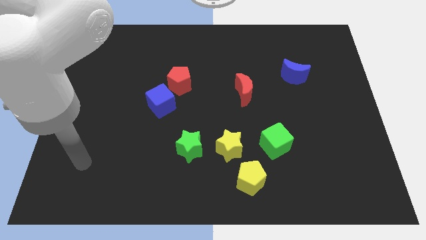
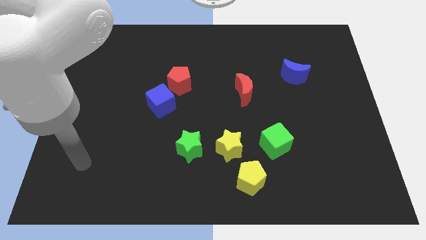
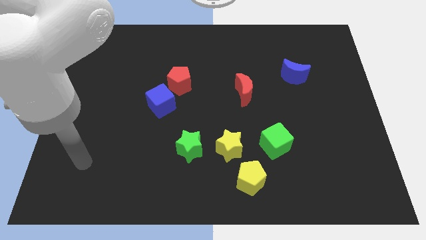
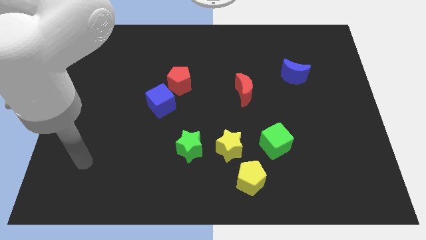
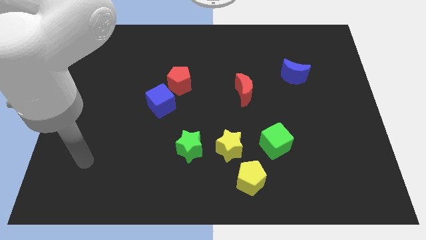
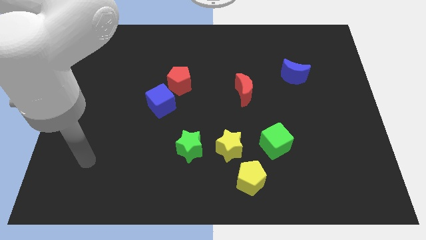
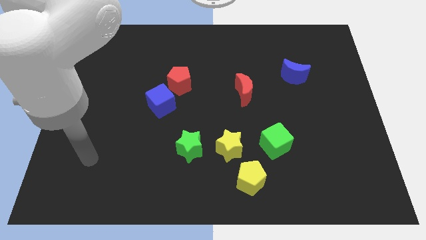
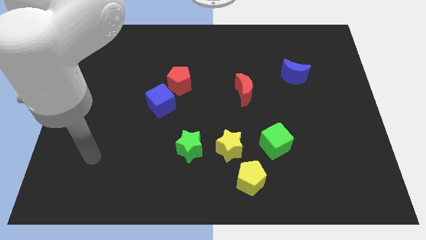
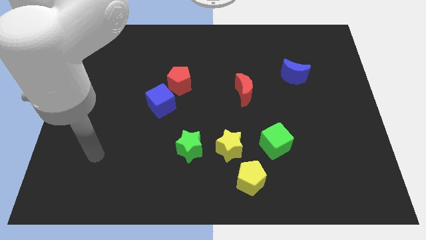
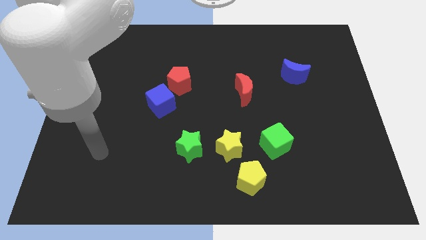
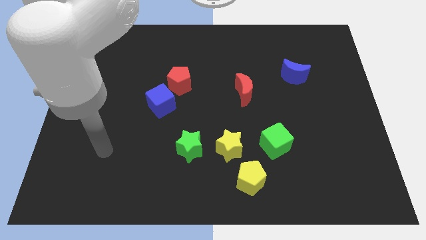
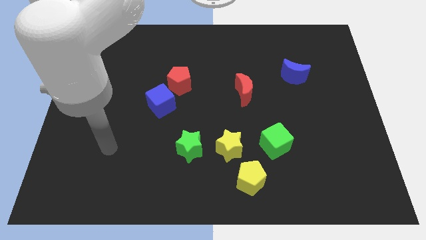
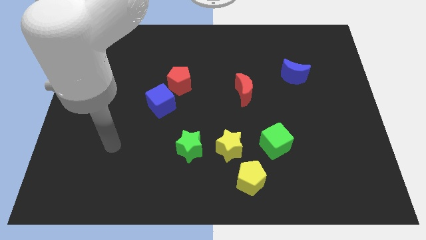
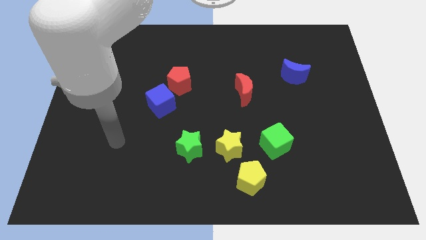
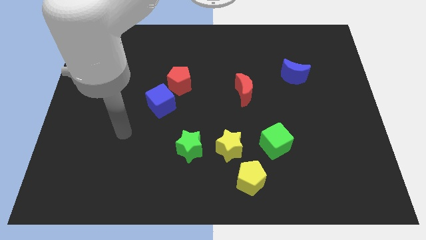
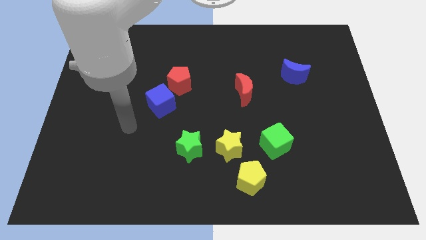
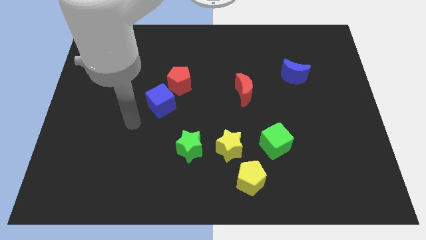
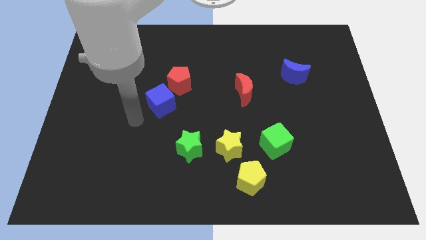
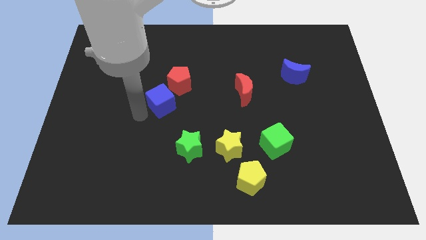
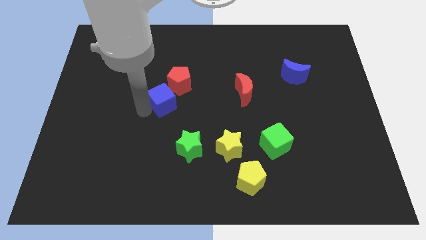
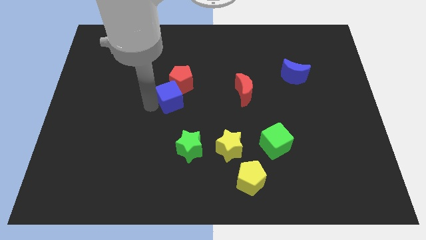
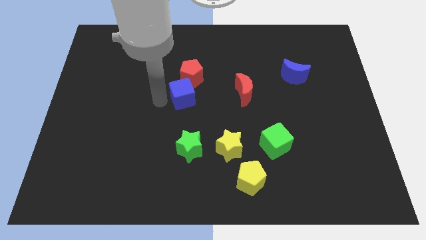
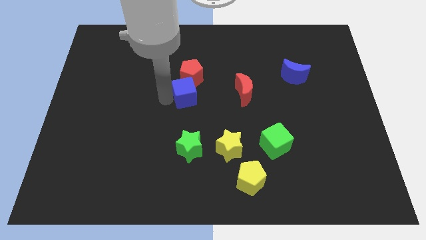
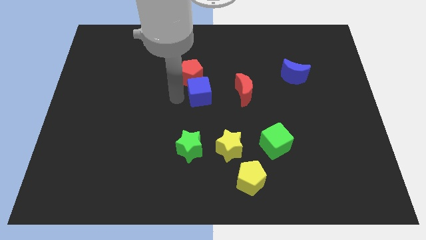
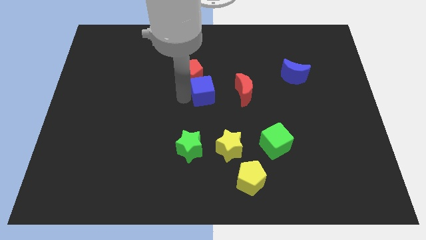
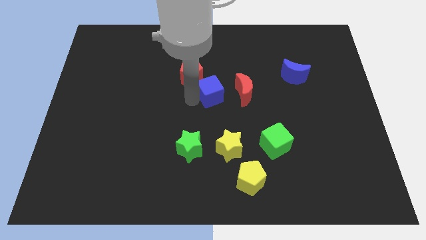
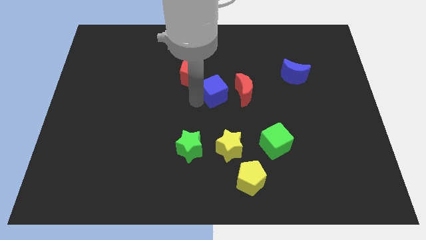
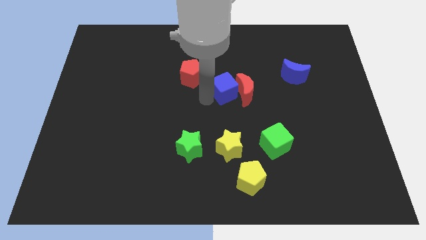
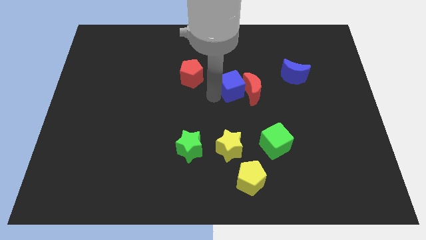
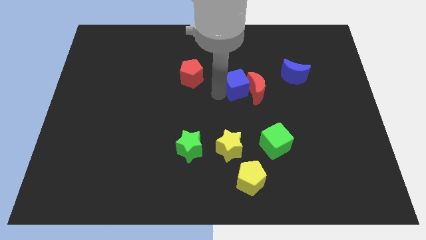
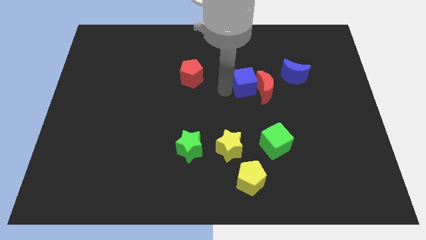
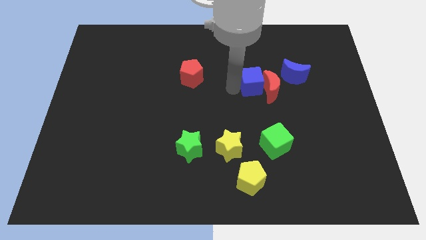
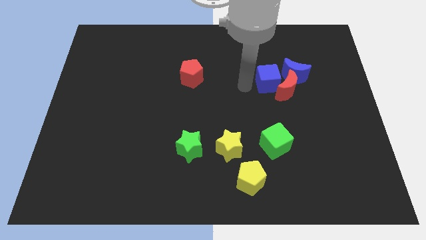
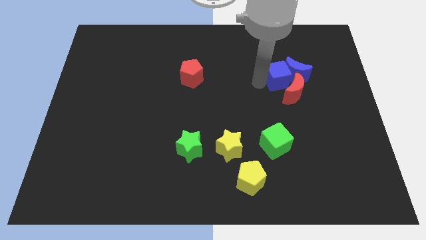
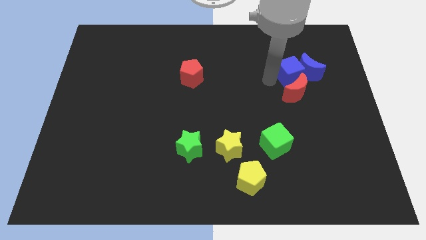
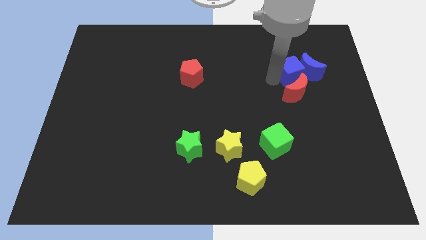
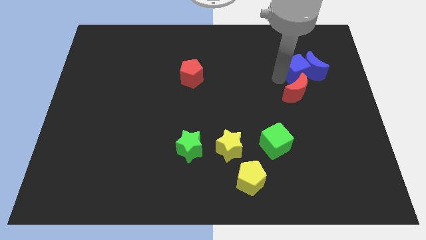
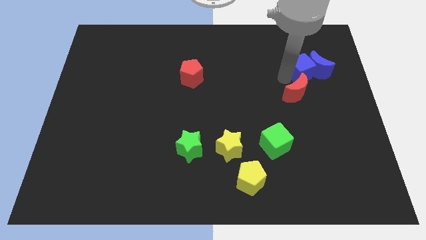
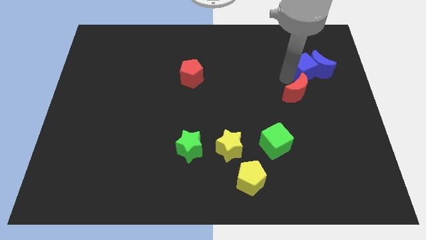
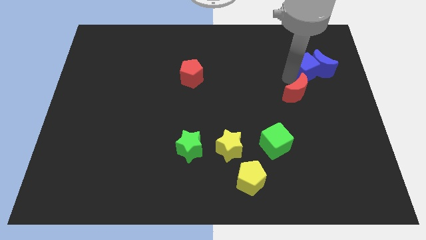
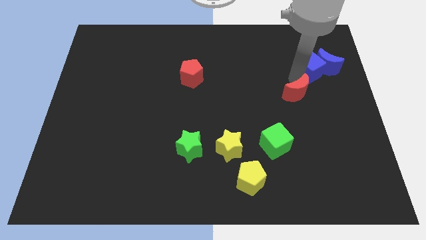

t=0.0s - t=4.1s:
place the blue cube above the red crescent

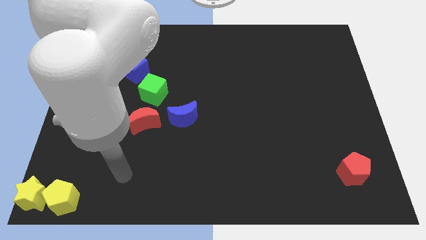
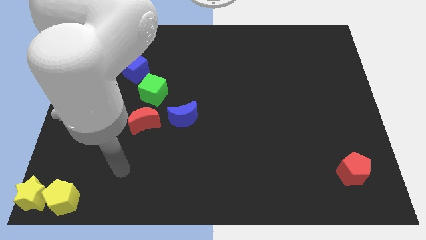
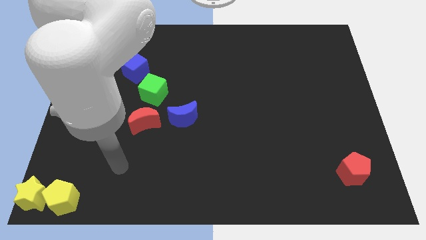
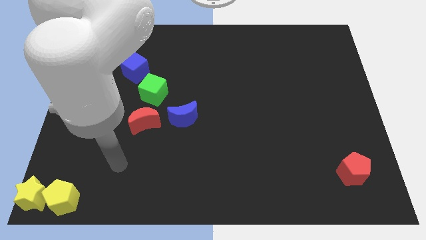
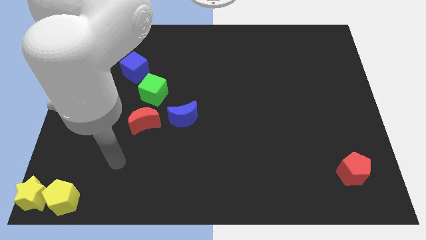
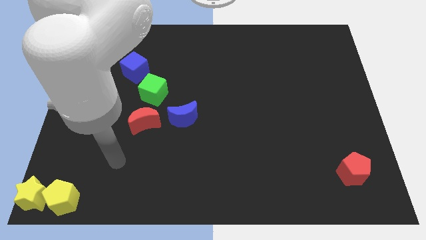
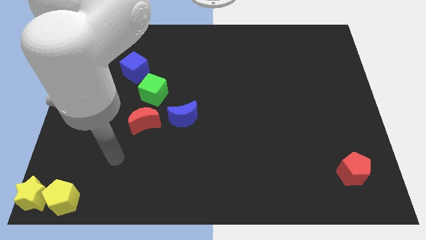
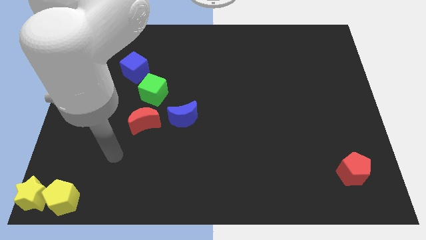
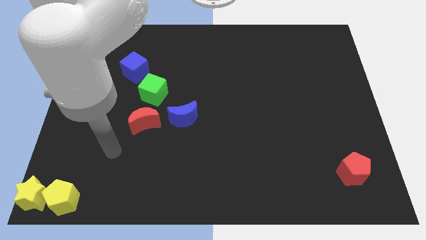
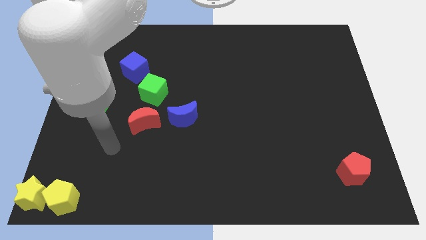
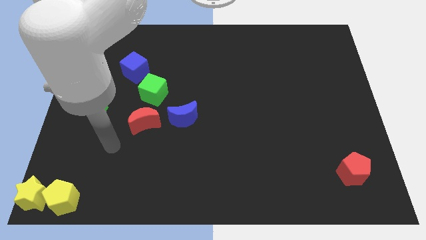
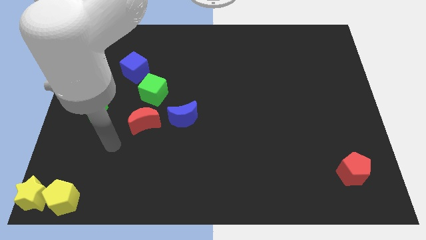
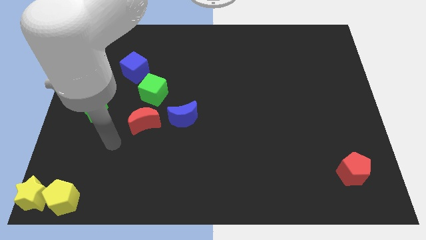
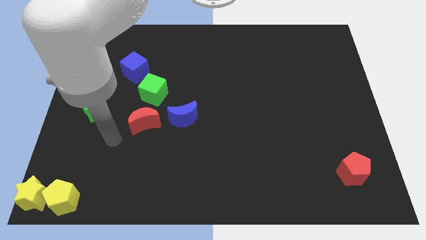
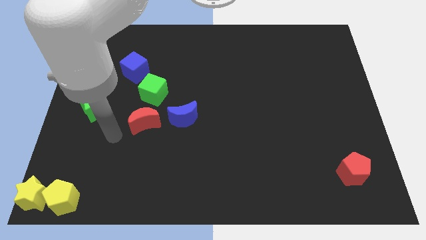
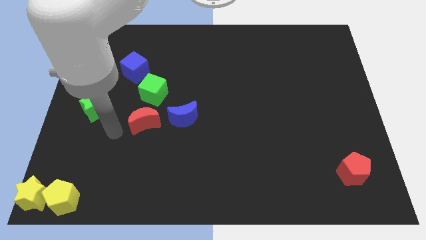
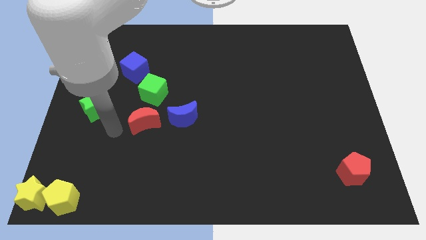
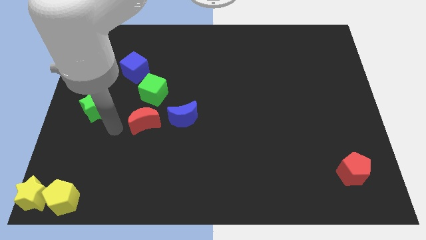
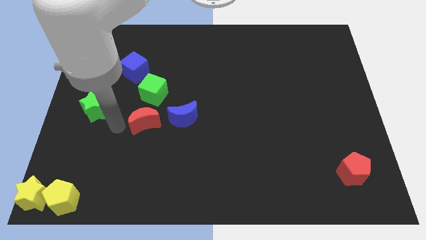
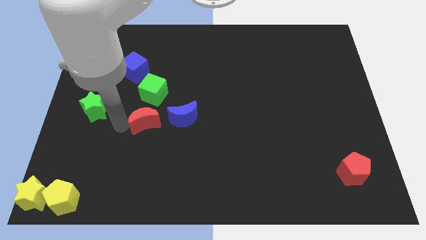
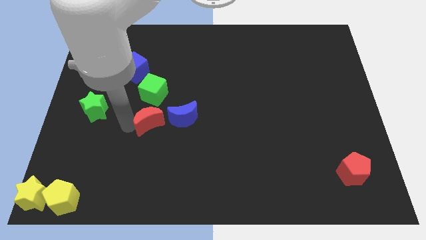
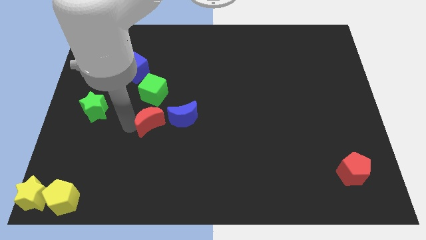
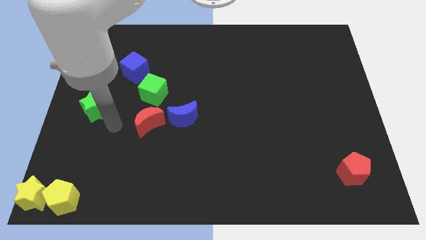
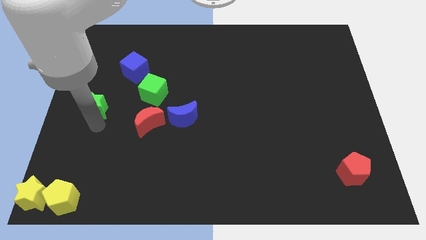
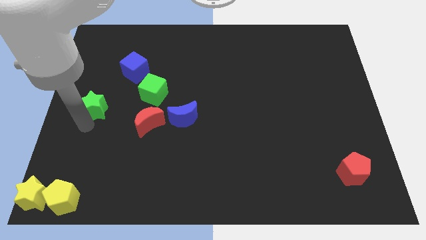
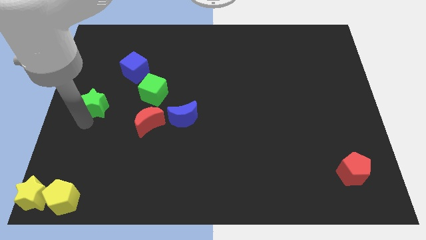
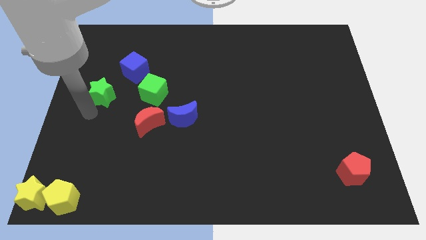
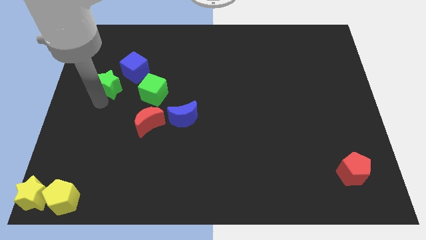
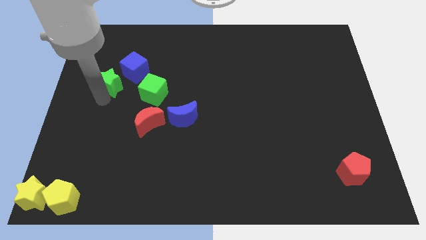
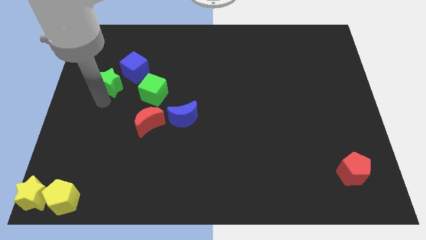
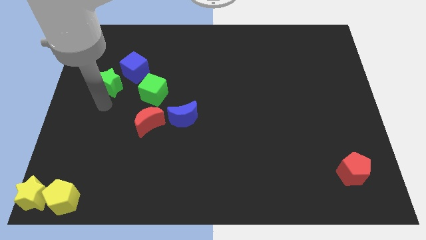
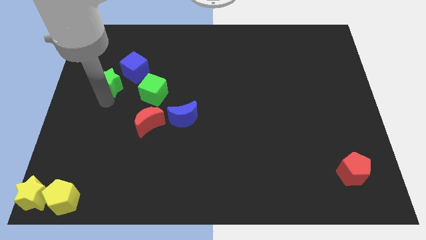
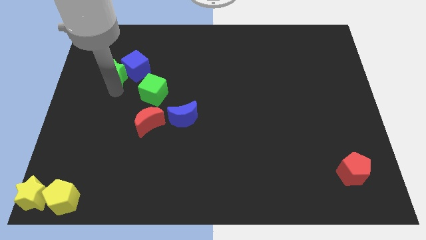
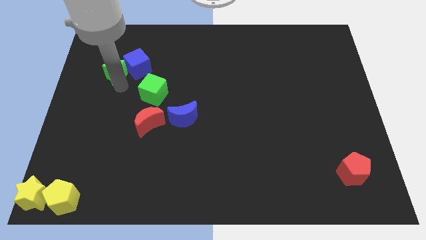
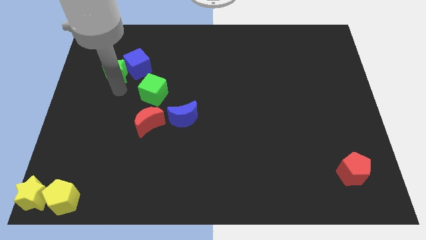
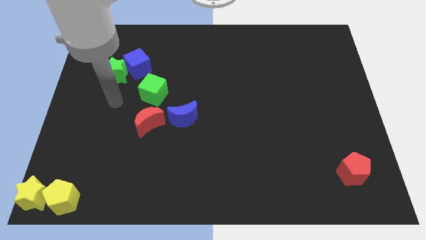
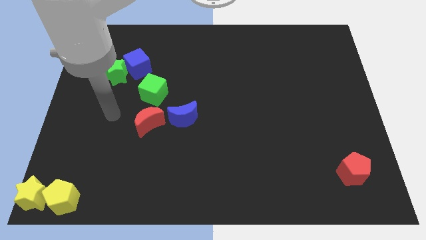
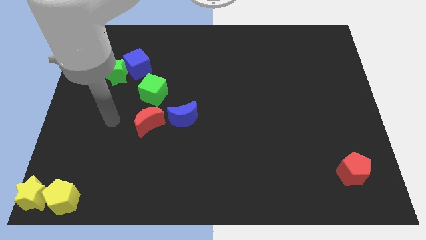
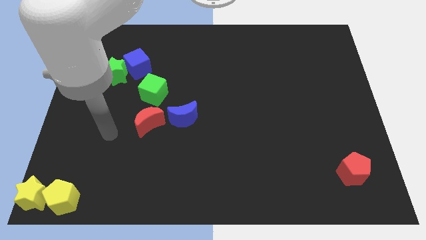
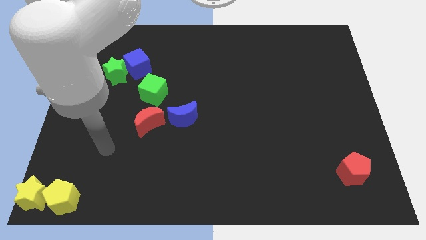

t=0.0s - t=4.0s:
move the green star to the left side of the blue cube

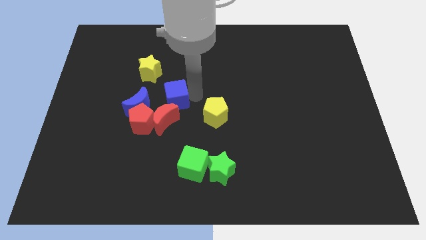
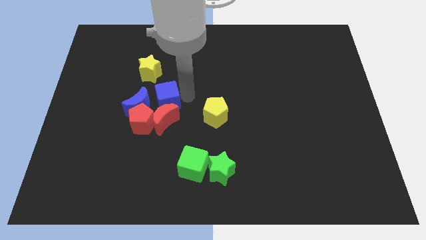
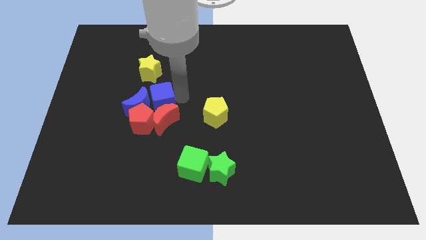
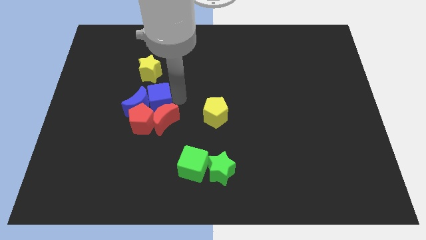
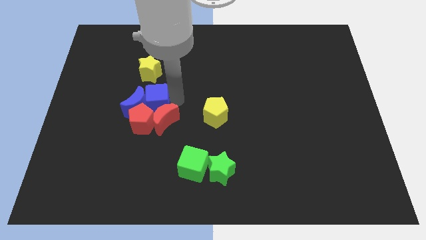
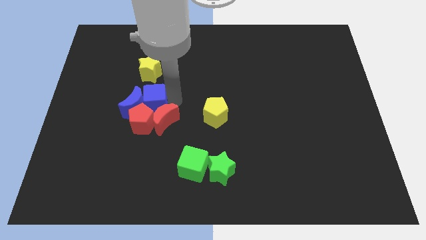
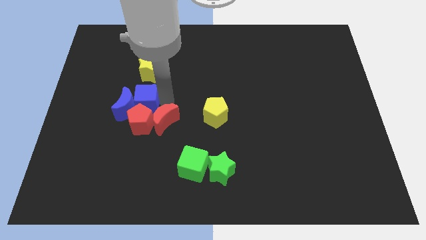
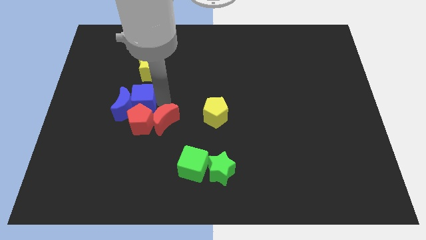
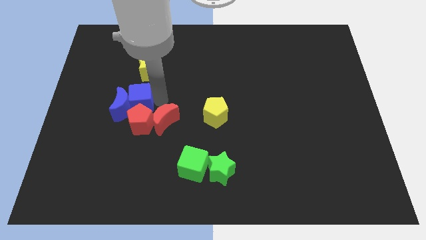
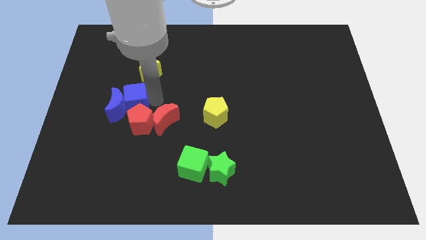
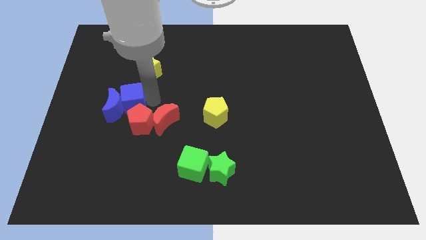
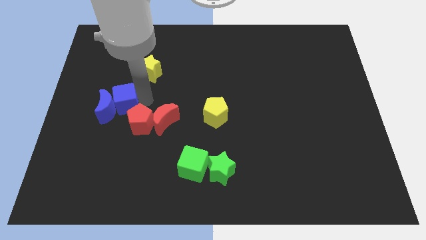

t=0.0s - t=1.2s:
push the blue cube into the blue crescent
